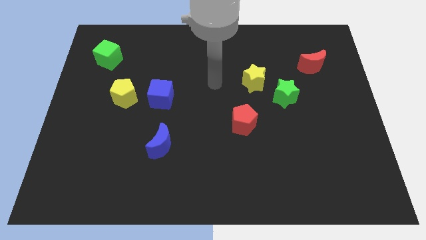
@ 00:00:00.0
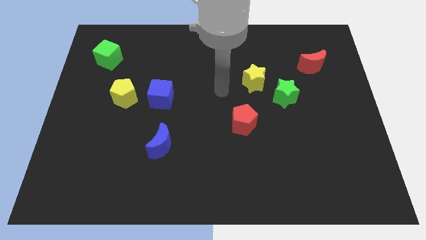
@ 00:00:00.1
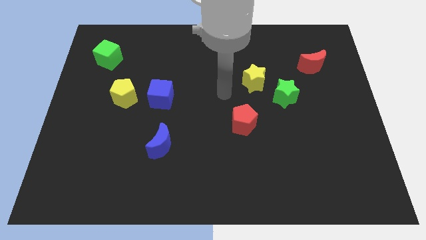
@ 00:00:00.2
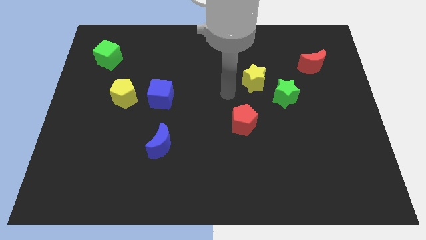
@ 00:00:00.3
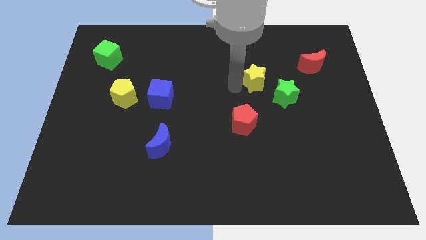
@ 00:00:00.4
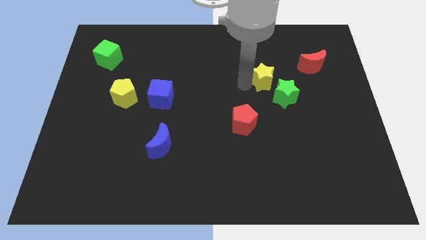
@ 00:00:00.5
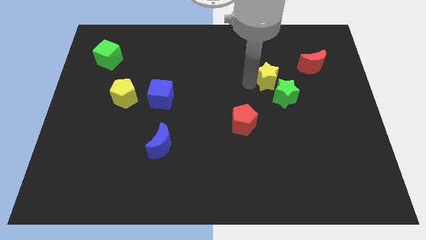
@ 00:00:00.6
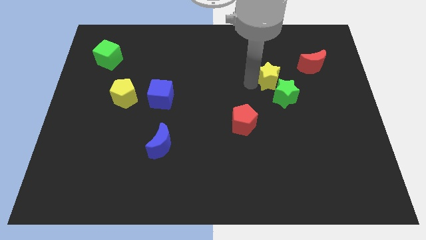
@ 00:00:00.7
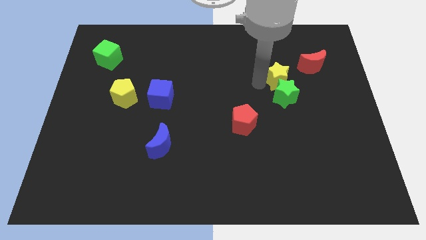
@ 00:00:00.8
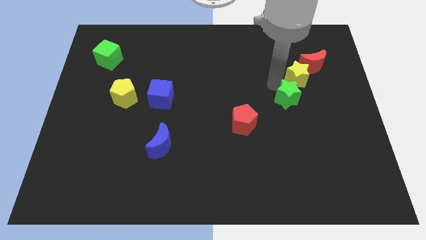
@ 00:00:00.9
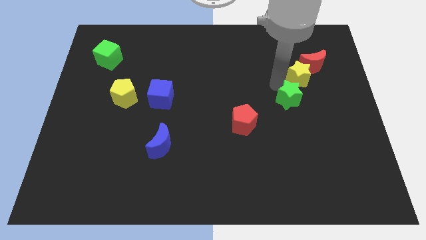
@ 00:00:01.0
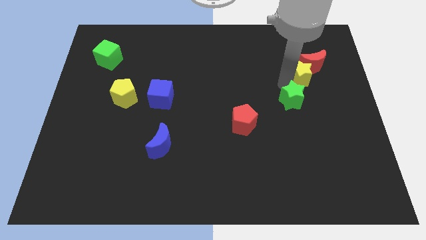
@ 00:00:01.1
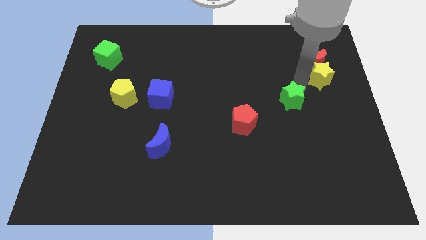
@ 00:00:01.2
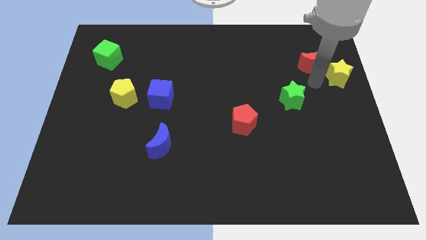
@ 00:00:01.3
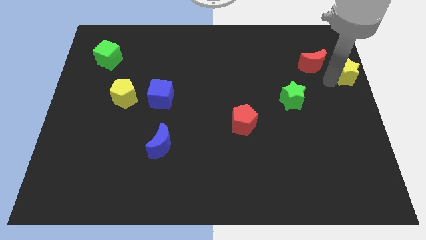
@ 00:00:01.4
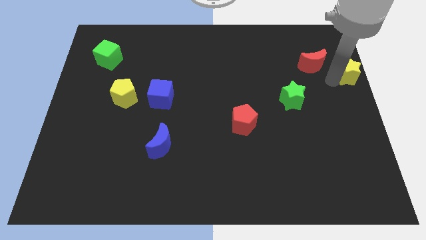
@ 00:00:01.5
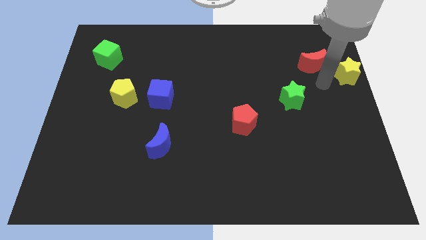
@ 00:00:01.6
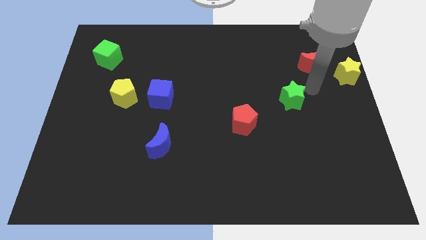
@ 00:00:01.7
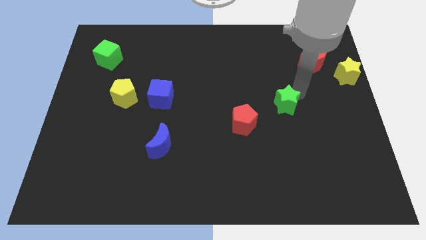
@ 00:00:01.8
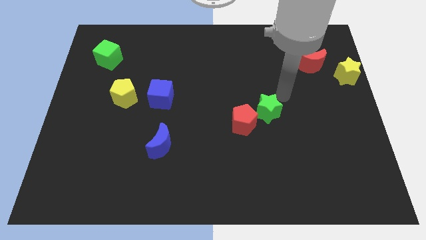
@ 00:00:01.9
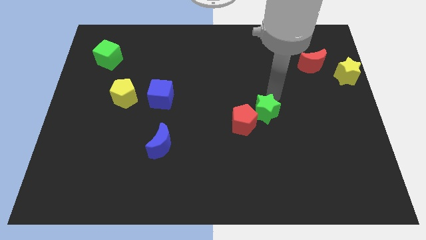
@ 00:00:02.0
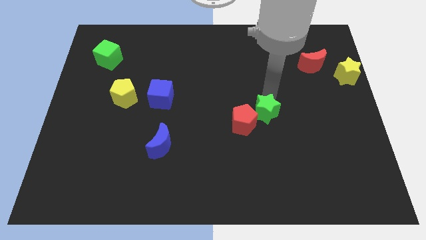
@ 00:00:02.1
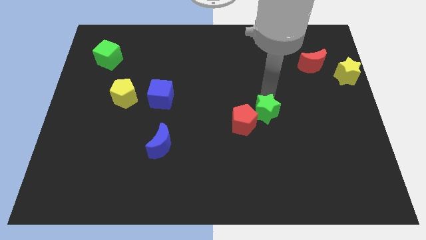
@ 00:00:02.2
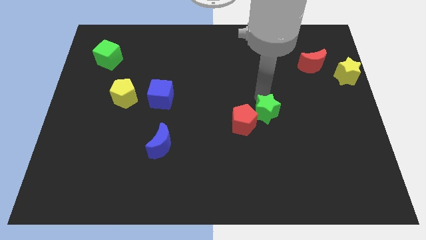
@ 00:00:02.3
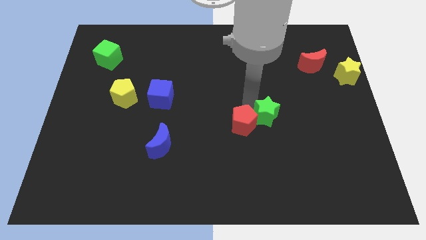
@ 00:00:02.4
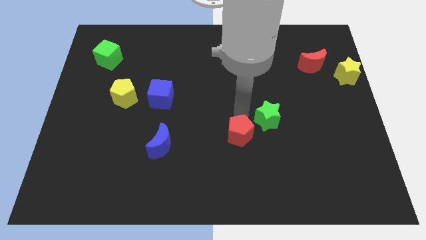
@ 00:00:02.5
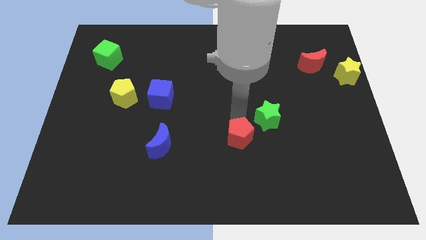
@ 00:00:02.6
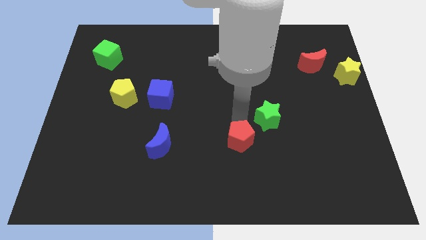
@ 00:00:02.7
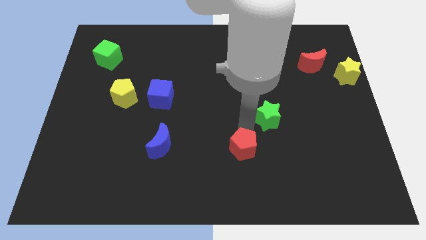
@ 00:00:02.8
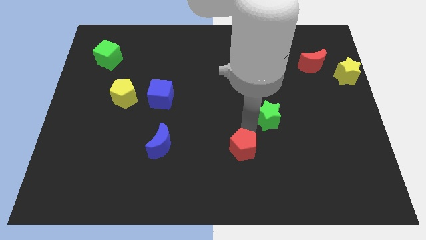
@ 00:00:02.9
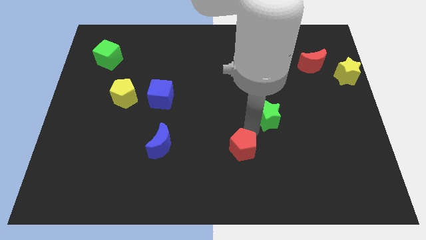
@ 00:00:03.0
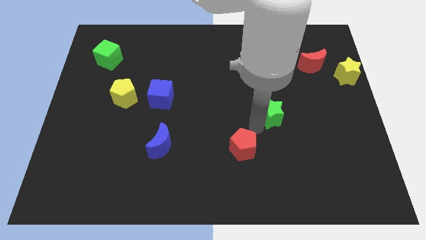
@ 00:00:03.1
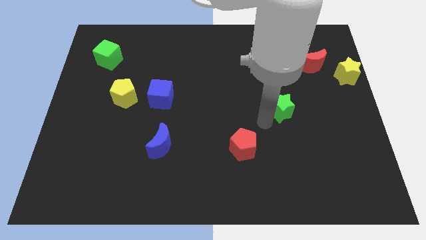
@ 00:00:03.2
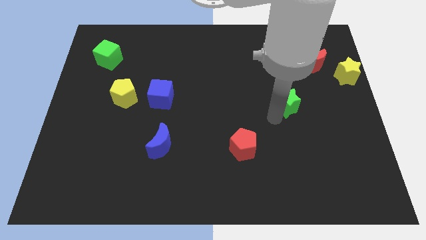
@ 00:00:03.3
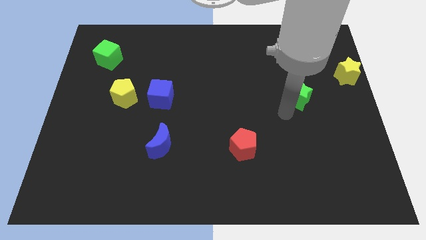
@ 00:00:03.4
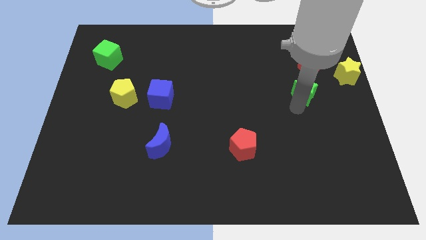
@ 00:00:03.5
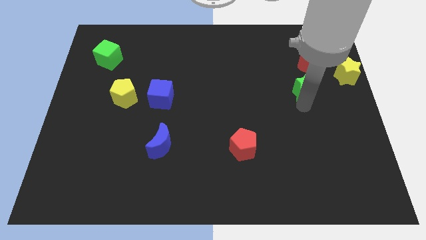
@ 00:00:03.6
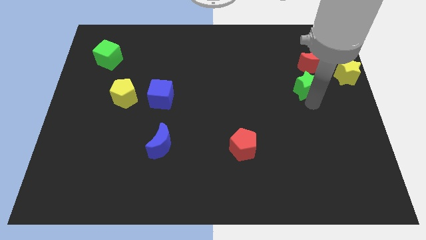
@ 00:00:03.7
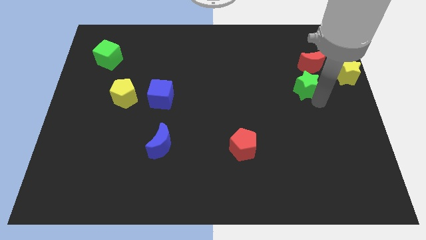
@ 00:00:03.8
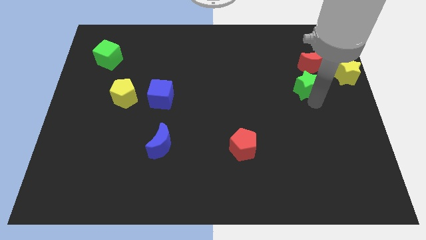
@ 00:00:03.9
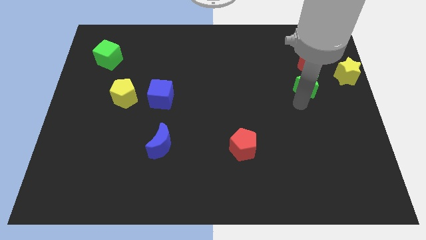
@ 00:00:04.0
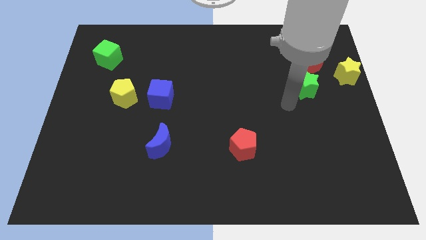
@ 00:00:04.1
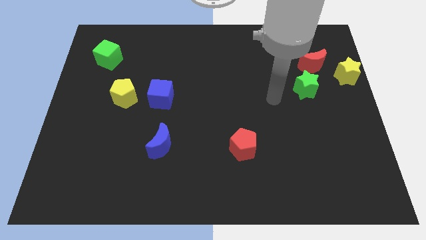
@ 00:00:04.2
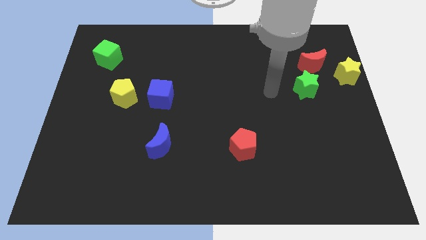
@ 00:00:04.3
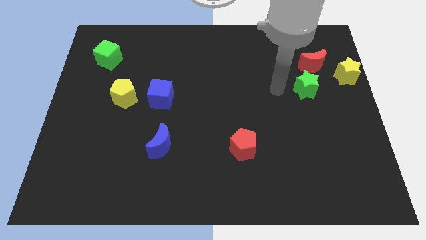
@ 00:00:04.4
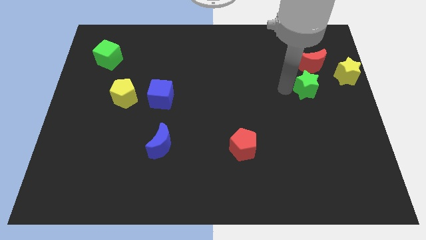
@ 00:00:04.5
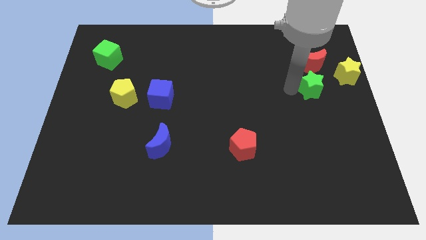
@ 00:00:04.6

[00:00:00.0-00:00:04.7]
scatter the few blocks with the hand

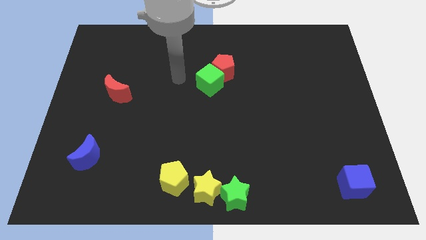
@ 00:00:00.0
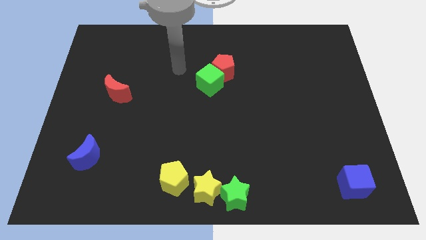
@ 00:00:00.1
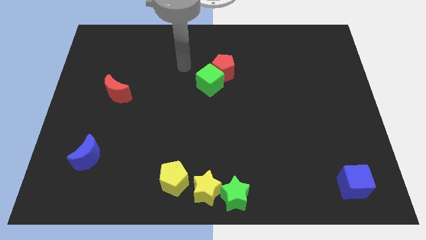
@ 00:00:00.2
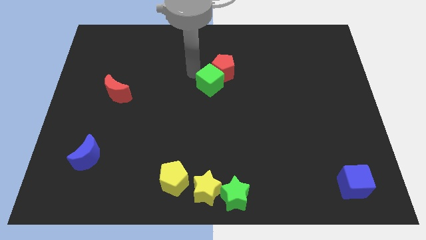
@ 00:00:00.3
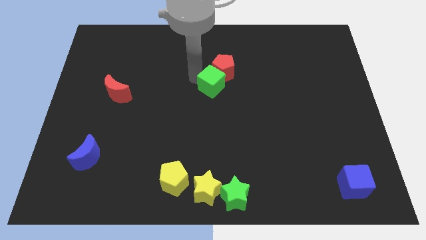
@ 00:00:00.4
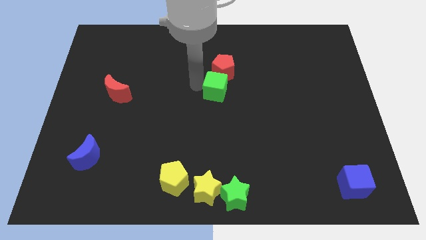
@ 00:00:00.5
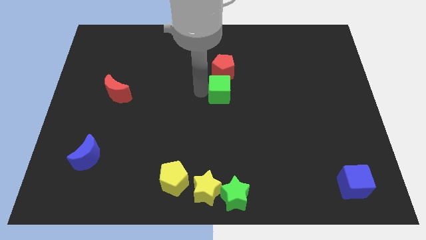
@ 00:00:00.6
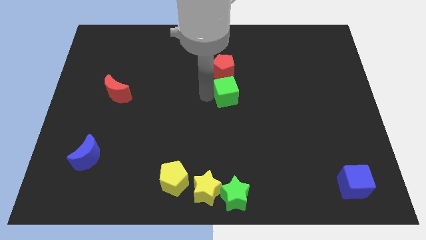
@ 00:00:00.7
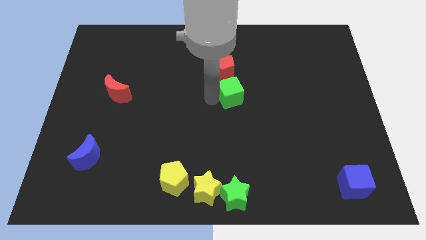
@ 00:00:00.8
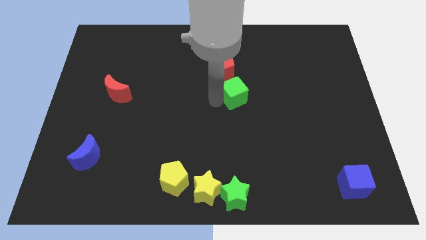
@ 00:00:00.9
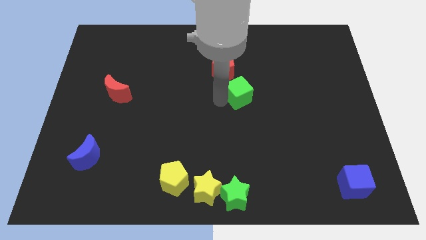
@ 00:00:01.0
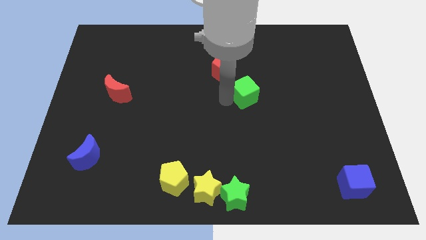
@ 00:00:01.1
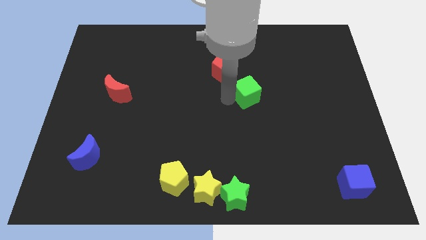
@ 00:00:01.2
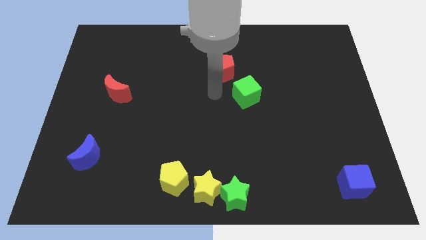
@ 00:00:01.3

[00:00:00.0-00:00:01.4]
move the green cube away from the red pentagon

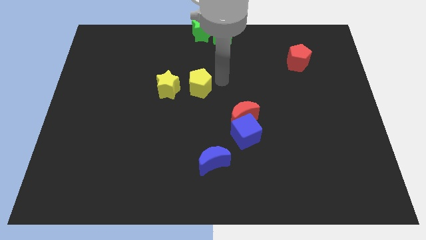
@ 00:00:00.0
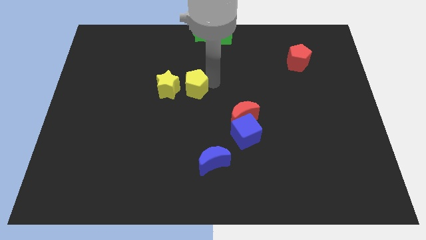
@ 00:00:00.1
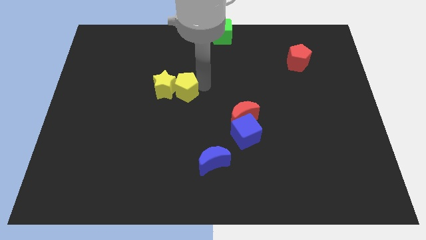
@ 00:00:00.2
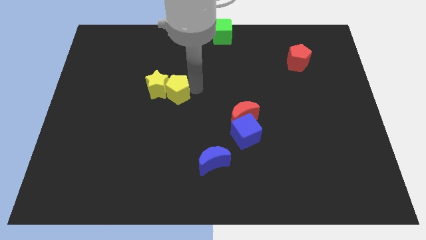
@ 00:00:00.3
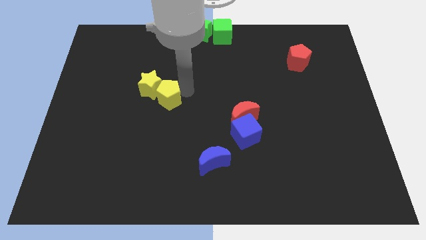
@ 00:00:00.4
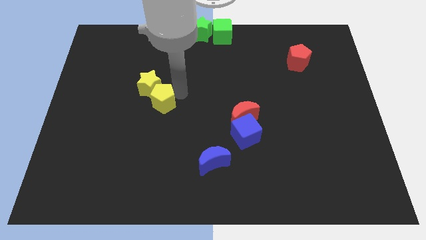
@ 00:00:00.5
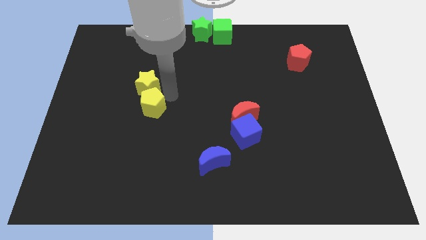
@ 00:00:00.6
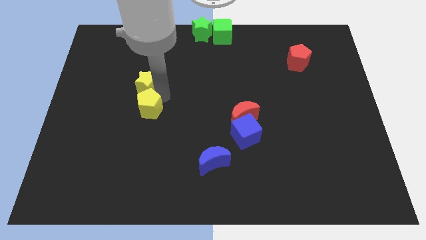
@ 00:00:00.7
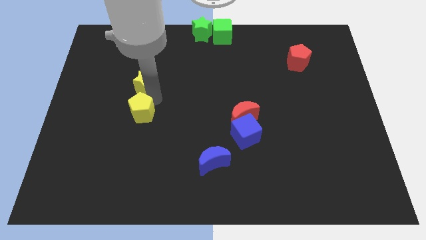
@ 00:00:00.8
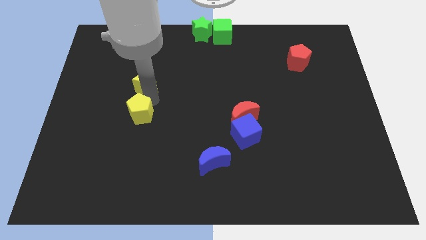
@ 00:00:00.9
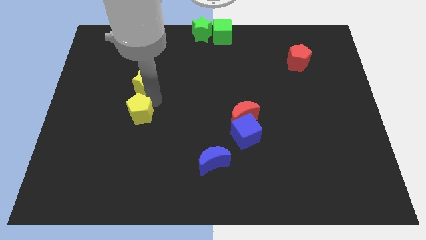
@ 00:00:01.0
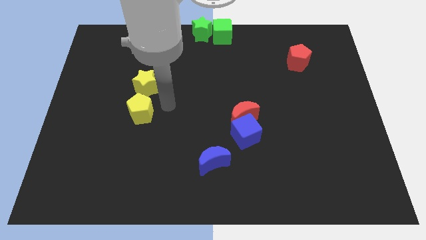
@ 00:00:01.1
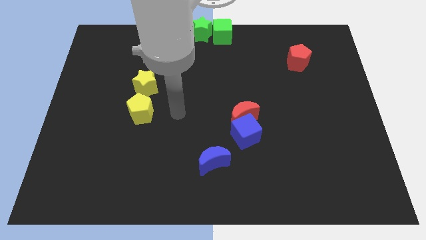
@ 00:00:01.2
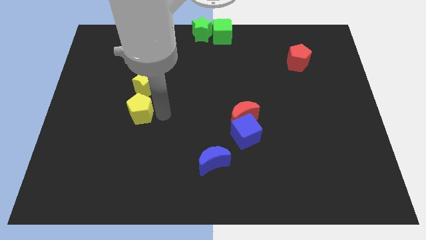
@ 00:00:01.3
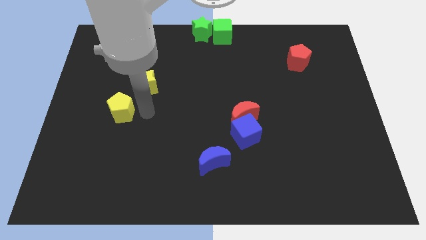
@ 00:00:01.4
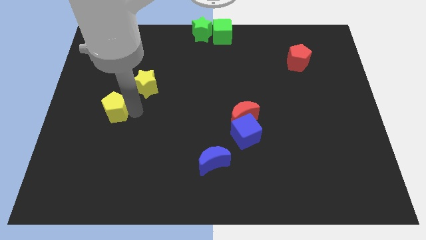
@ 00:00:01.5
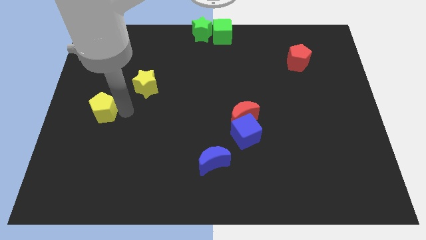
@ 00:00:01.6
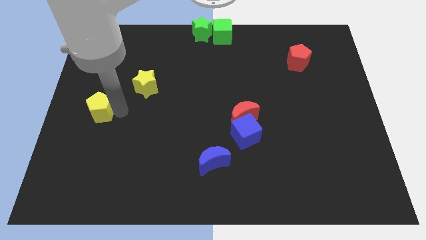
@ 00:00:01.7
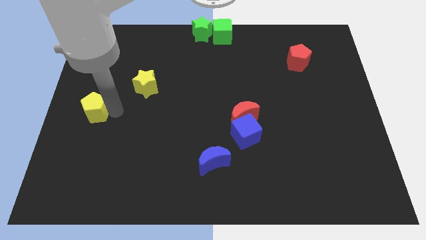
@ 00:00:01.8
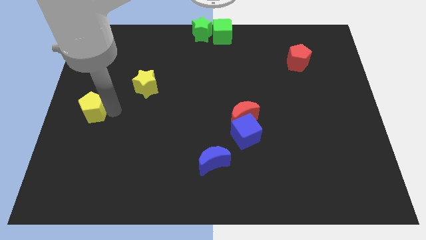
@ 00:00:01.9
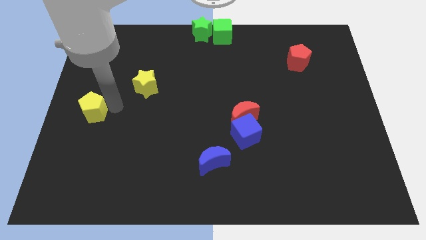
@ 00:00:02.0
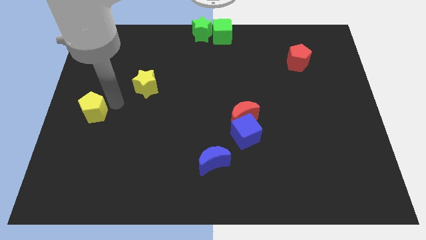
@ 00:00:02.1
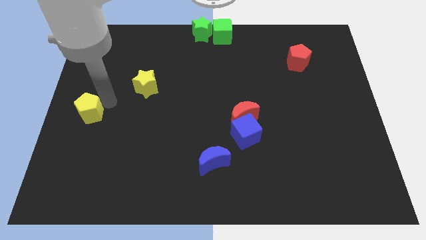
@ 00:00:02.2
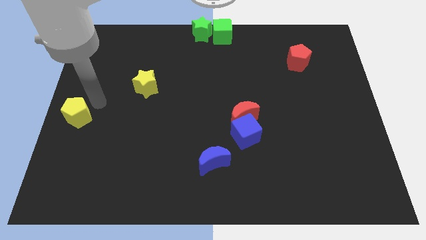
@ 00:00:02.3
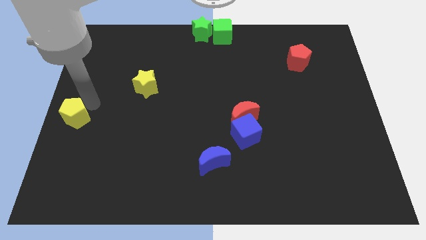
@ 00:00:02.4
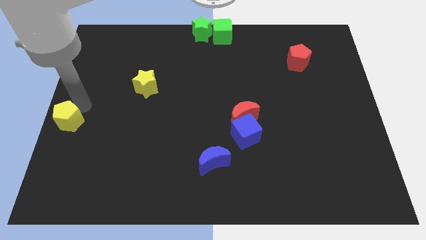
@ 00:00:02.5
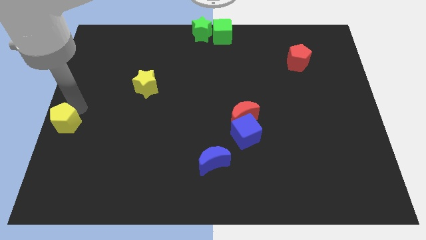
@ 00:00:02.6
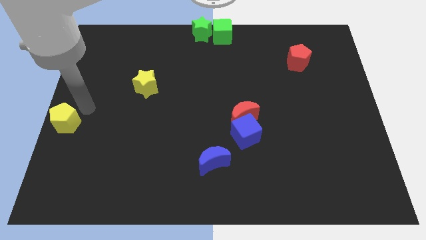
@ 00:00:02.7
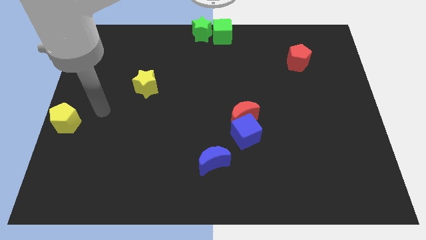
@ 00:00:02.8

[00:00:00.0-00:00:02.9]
move the yellow pentagon parallel bottom left to the yellow star
